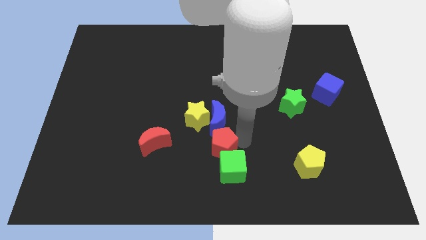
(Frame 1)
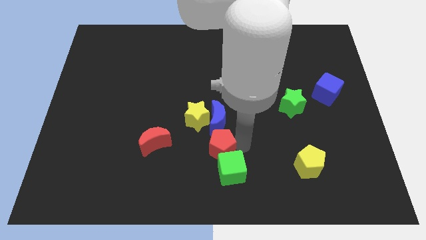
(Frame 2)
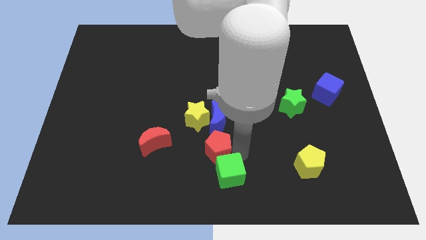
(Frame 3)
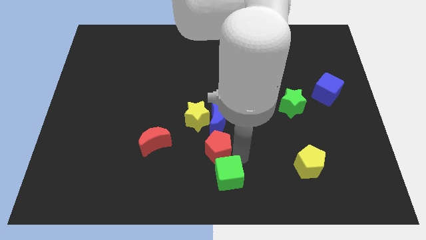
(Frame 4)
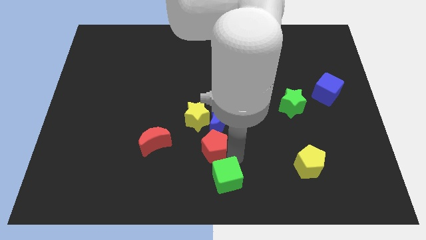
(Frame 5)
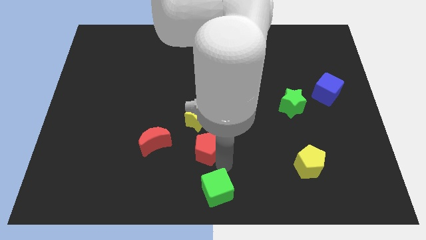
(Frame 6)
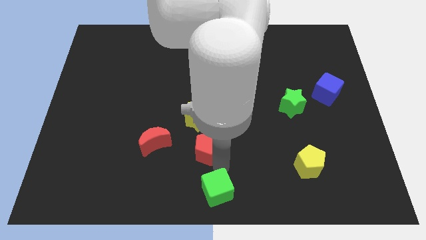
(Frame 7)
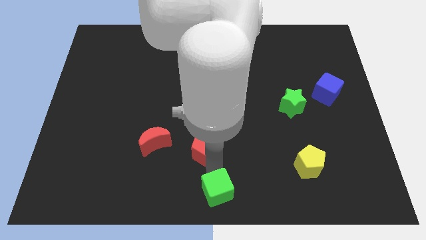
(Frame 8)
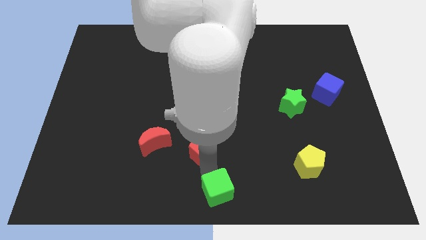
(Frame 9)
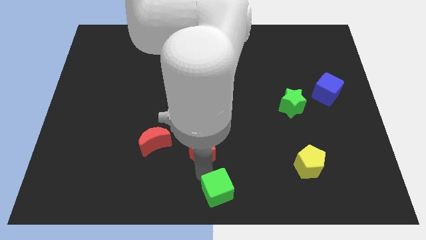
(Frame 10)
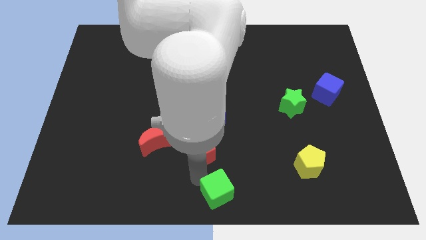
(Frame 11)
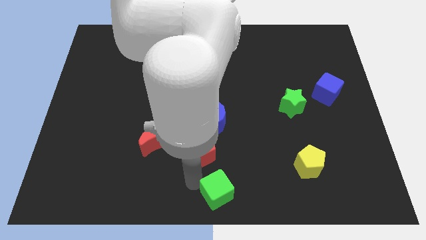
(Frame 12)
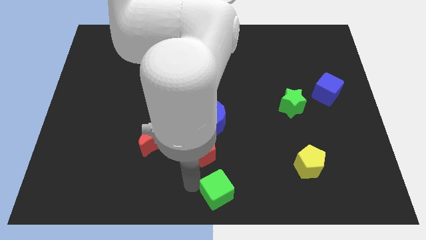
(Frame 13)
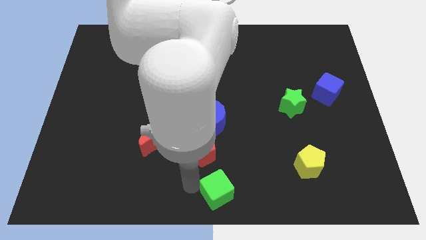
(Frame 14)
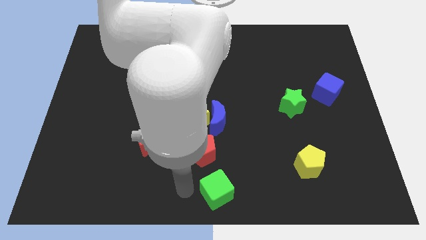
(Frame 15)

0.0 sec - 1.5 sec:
separate the red pentagon and green cube from each other

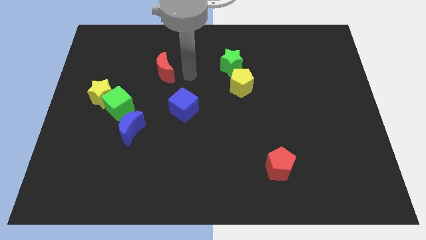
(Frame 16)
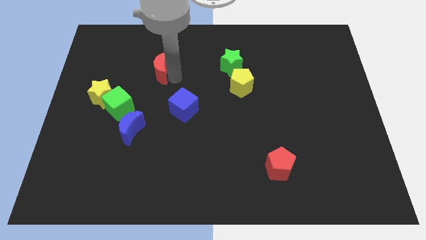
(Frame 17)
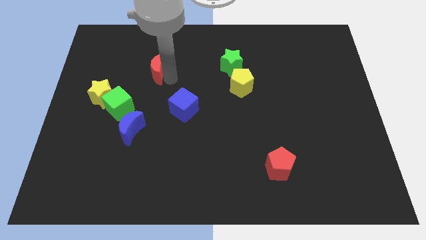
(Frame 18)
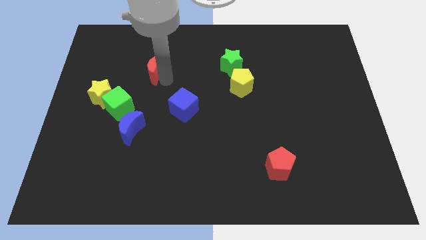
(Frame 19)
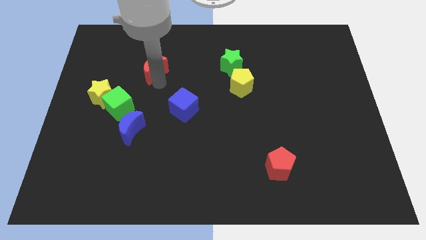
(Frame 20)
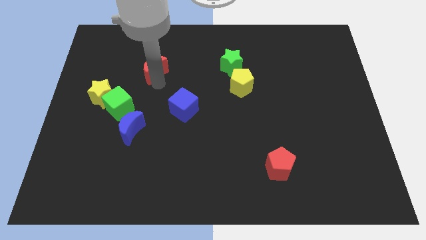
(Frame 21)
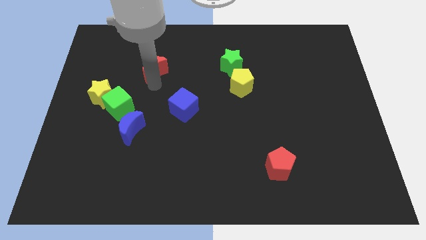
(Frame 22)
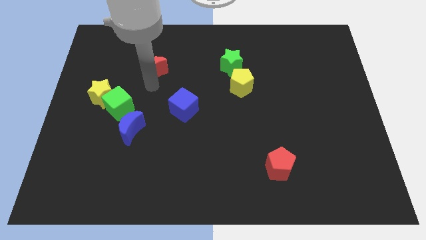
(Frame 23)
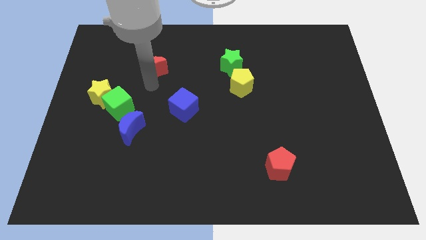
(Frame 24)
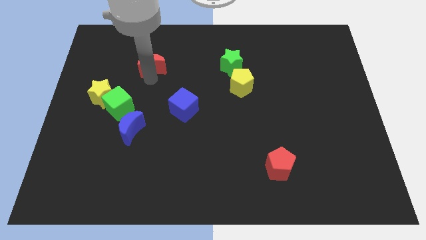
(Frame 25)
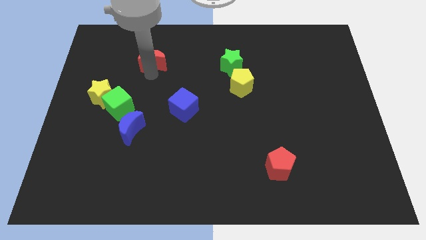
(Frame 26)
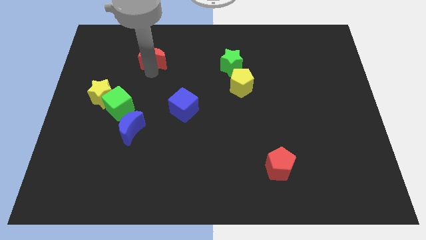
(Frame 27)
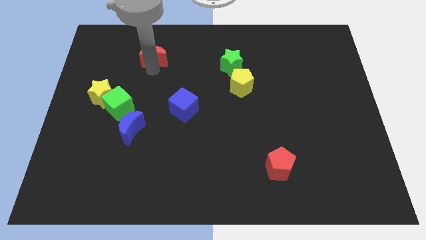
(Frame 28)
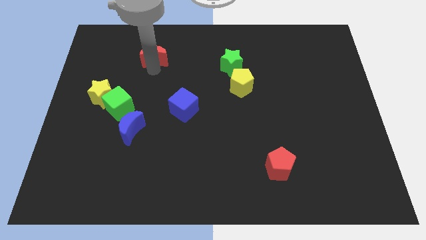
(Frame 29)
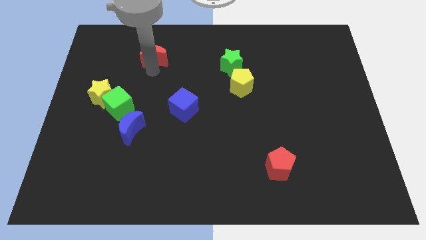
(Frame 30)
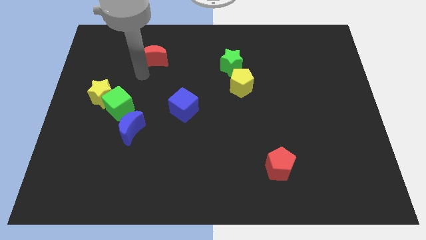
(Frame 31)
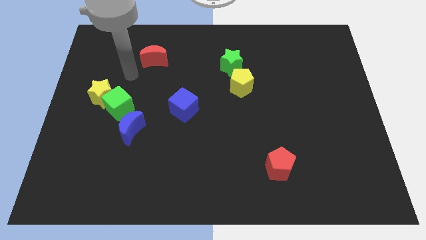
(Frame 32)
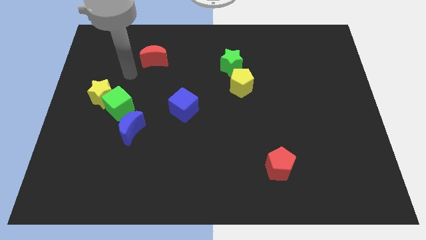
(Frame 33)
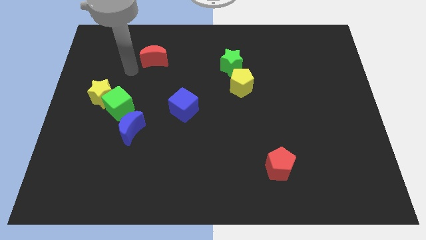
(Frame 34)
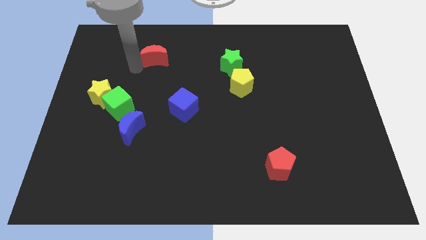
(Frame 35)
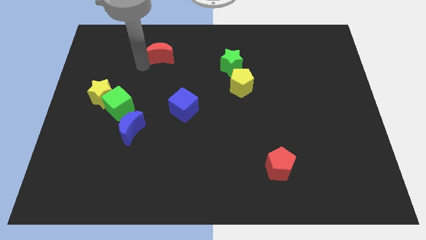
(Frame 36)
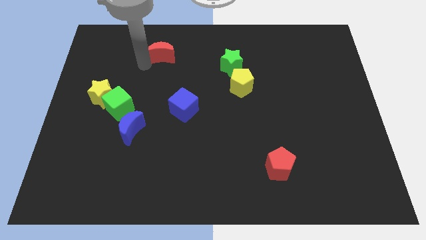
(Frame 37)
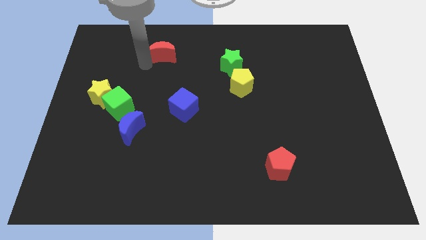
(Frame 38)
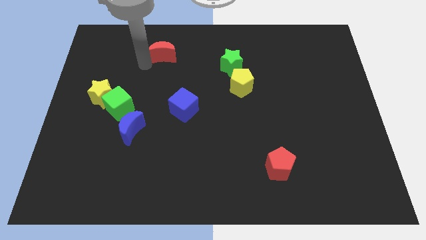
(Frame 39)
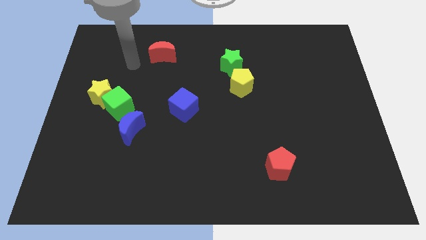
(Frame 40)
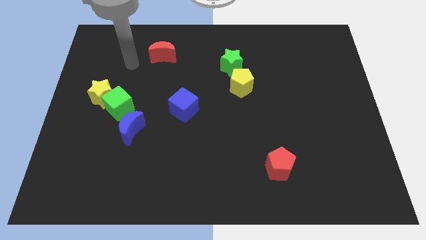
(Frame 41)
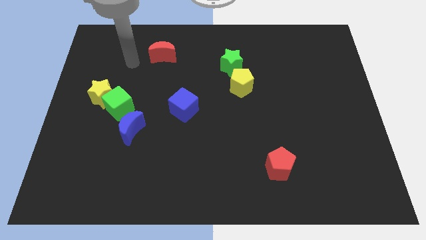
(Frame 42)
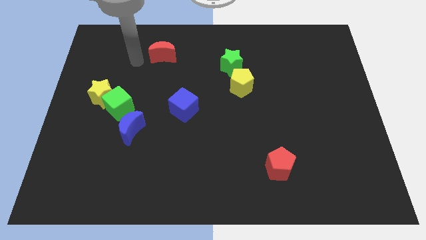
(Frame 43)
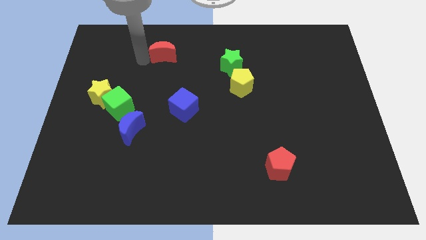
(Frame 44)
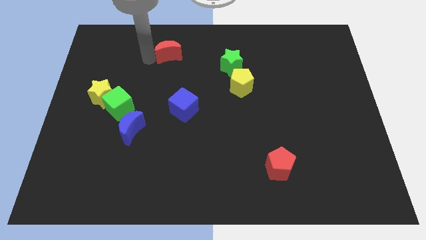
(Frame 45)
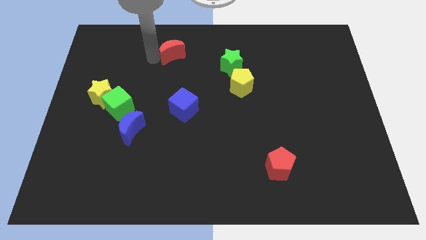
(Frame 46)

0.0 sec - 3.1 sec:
move the red crescent slightly upwards

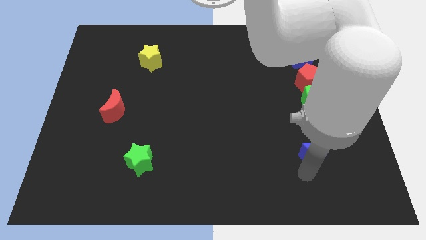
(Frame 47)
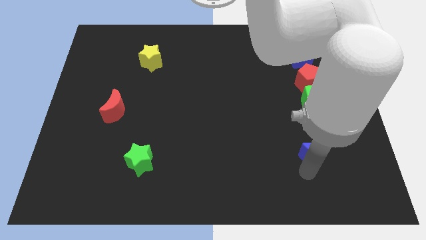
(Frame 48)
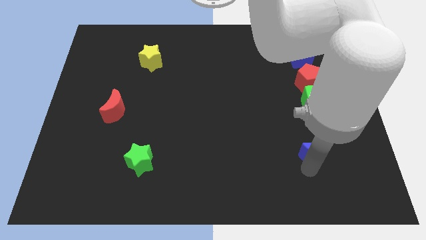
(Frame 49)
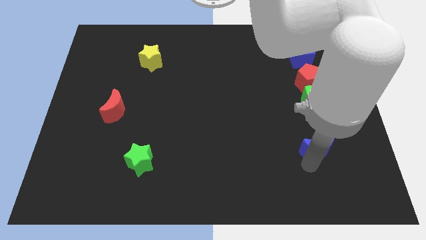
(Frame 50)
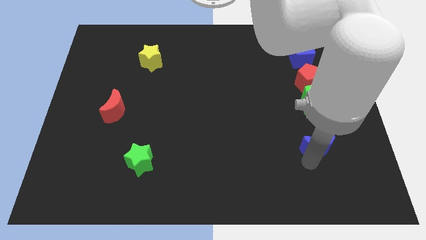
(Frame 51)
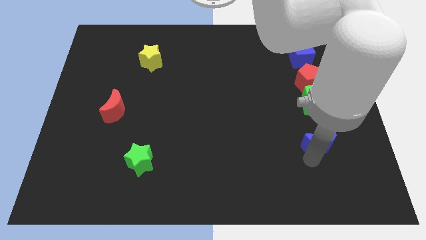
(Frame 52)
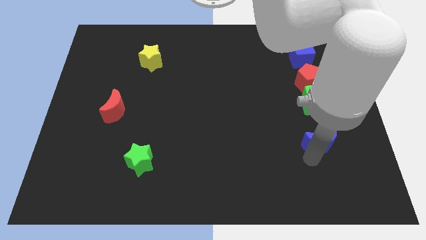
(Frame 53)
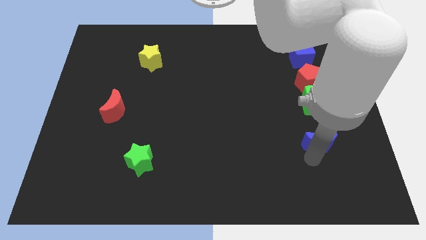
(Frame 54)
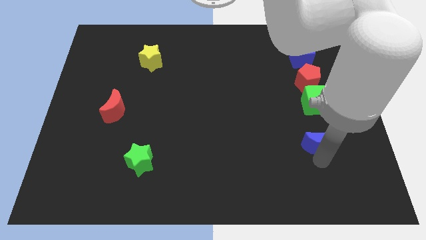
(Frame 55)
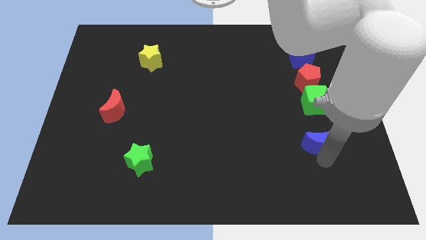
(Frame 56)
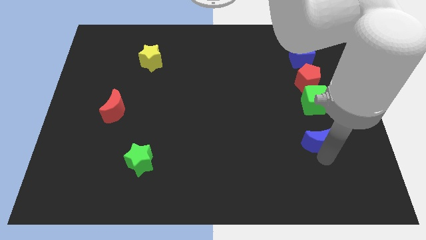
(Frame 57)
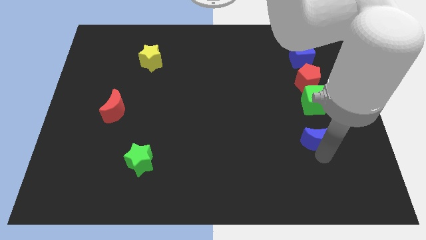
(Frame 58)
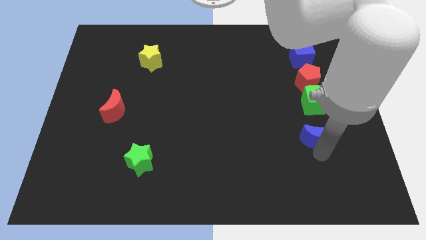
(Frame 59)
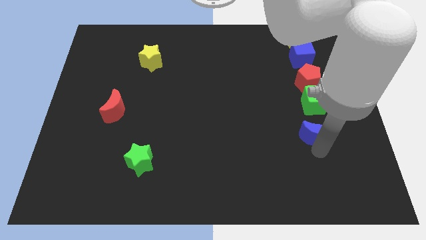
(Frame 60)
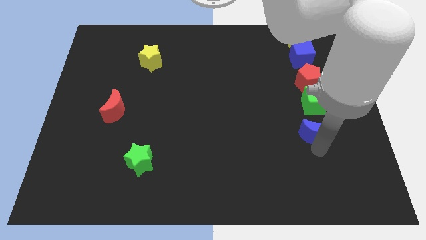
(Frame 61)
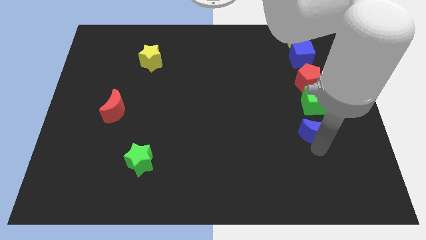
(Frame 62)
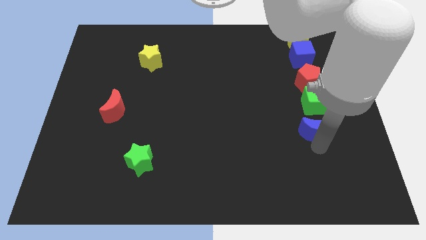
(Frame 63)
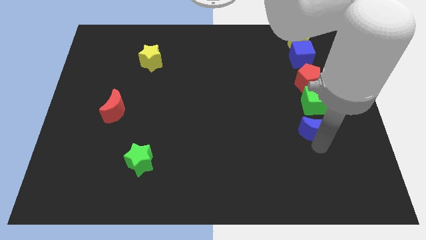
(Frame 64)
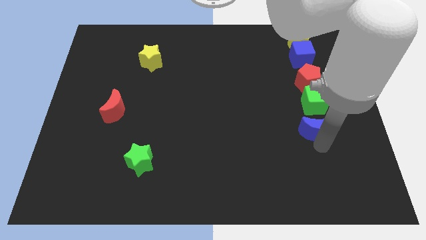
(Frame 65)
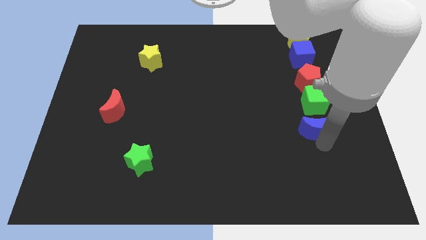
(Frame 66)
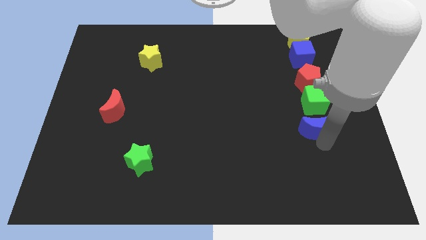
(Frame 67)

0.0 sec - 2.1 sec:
slide the blue crescent bottom side of the green cube

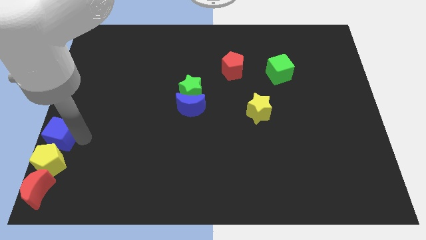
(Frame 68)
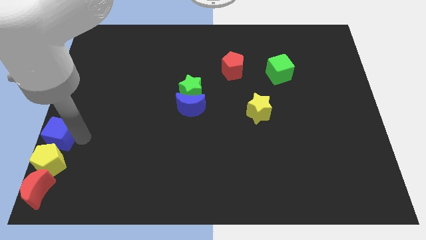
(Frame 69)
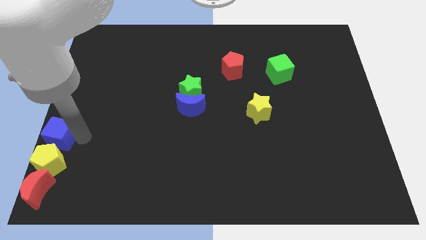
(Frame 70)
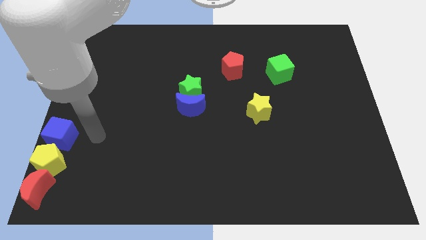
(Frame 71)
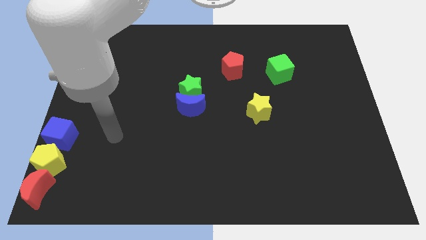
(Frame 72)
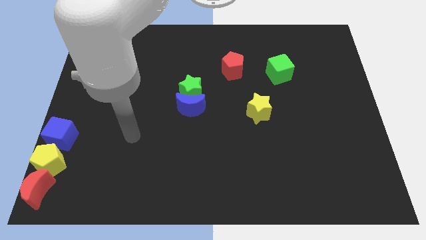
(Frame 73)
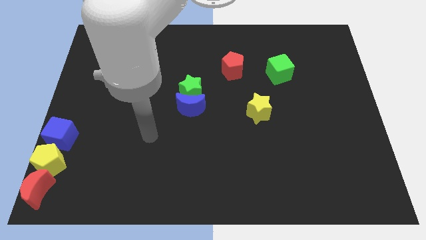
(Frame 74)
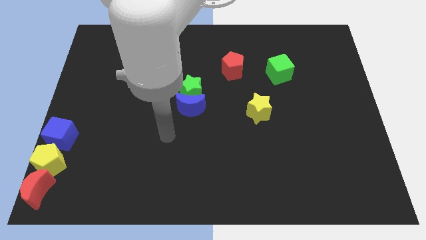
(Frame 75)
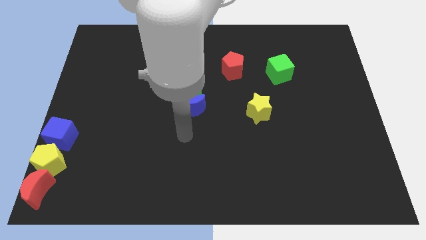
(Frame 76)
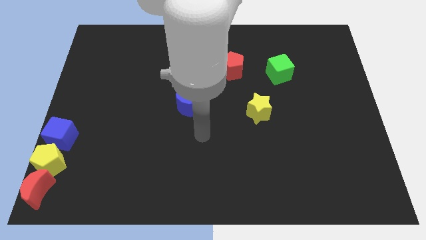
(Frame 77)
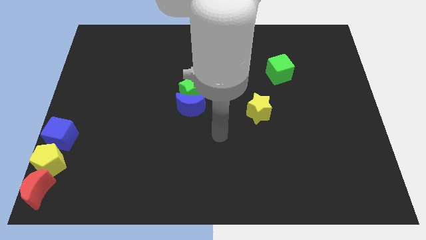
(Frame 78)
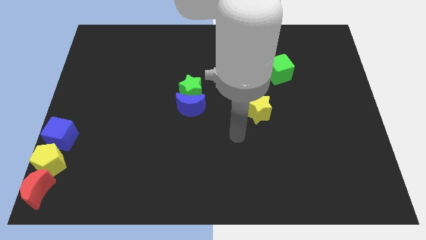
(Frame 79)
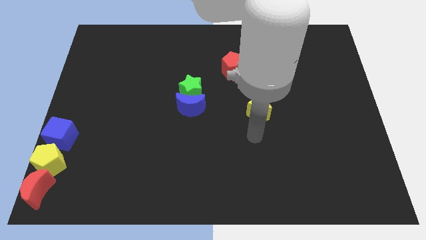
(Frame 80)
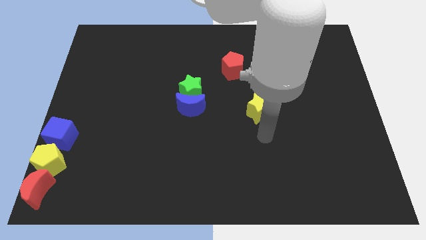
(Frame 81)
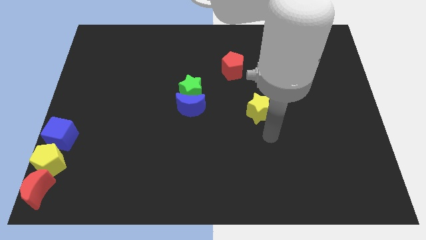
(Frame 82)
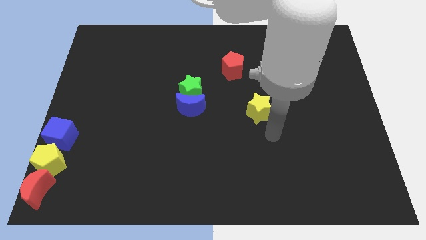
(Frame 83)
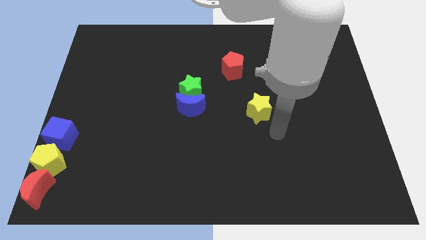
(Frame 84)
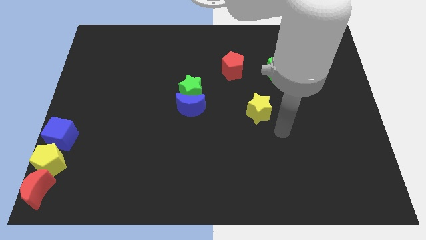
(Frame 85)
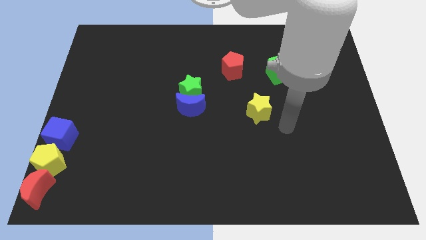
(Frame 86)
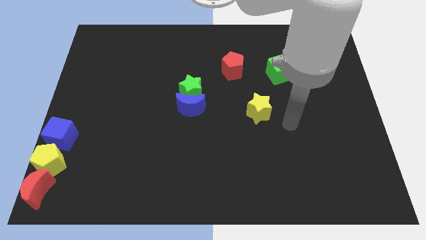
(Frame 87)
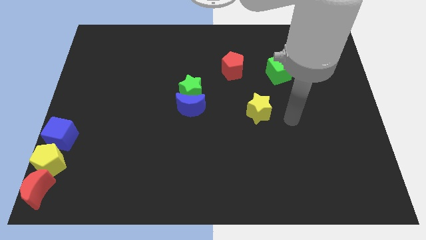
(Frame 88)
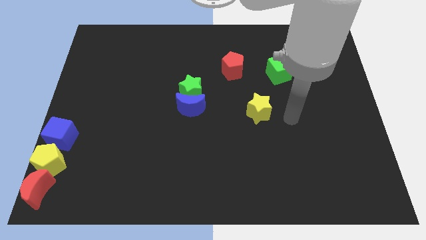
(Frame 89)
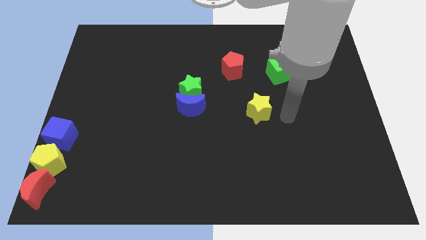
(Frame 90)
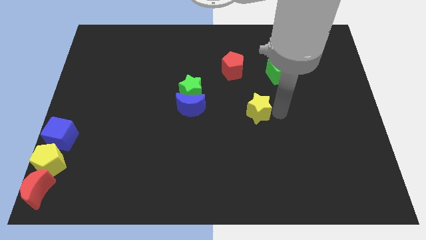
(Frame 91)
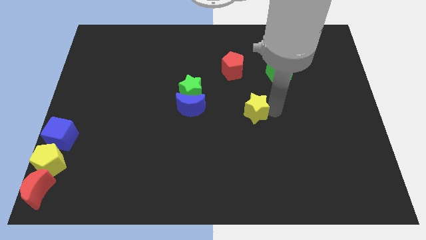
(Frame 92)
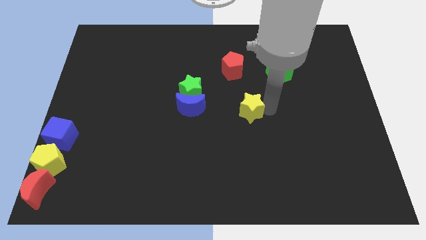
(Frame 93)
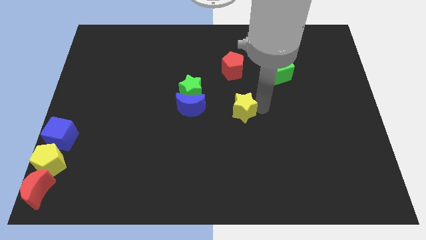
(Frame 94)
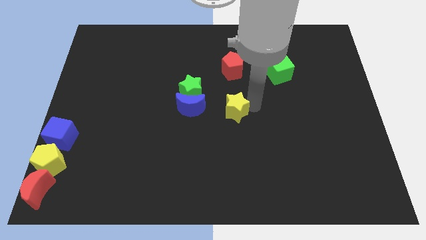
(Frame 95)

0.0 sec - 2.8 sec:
place the yellow star down to the red pentagon
